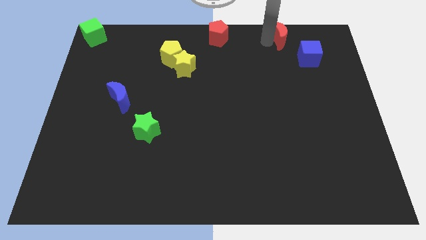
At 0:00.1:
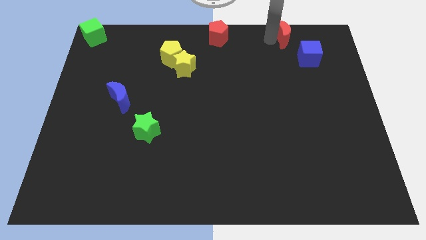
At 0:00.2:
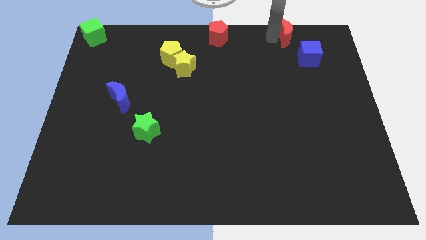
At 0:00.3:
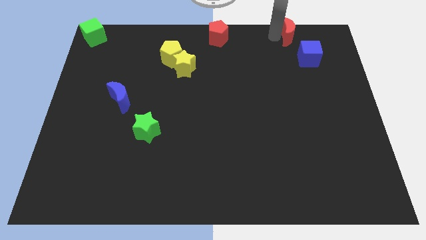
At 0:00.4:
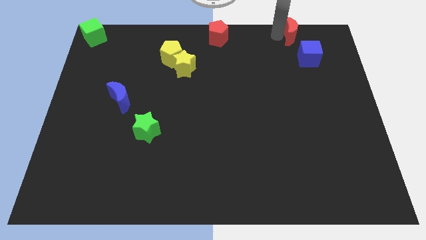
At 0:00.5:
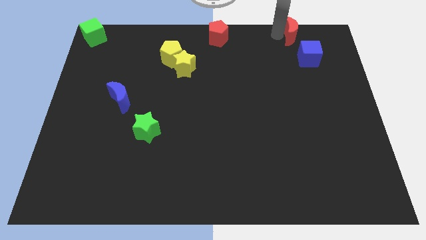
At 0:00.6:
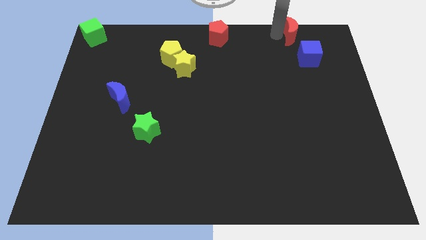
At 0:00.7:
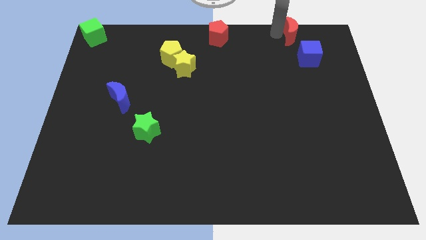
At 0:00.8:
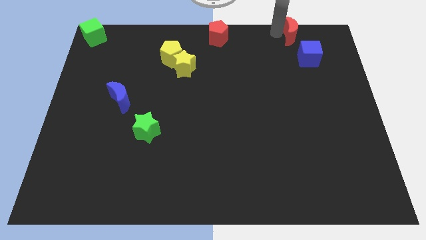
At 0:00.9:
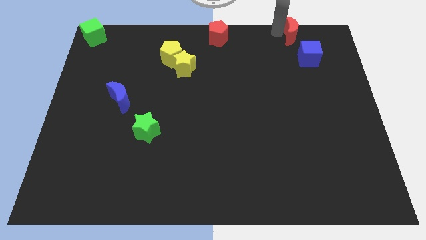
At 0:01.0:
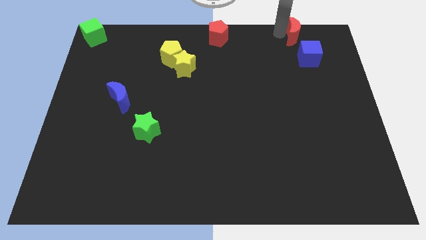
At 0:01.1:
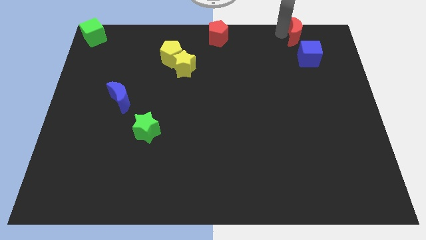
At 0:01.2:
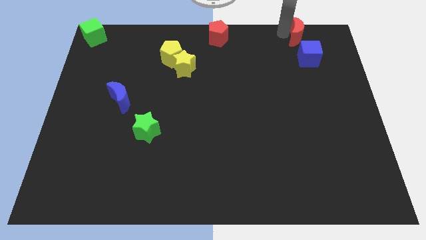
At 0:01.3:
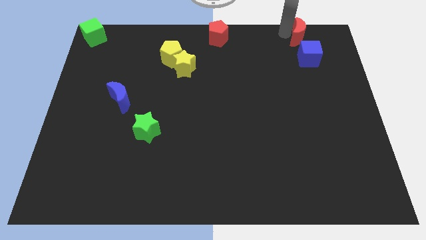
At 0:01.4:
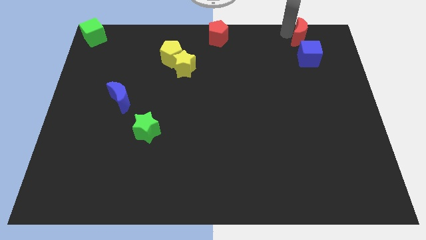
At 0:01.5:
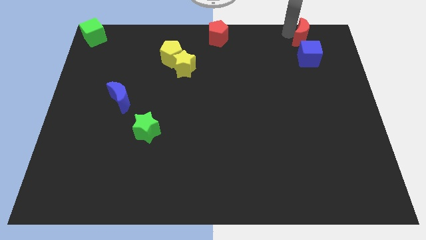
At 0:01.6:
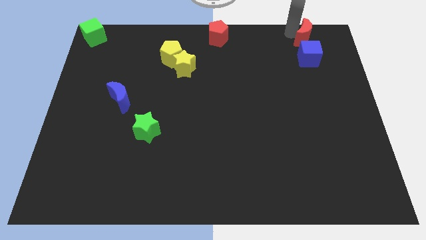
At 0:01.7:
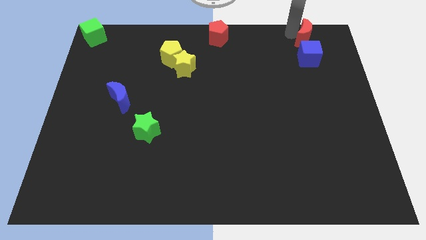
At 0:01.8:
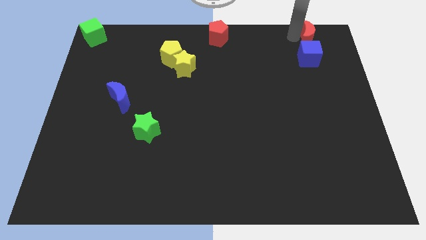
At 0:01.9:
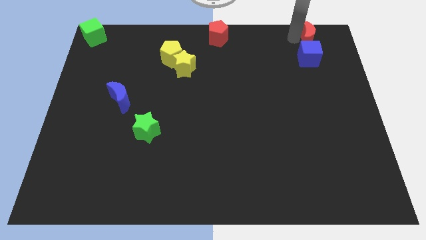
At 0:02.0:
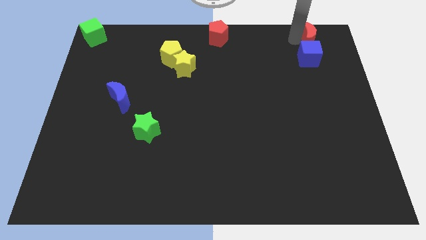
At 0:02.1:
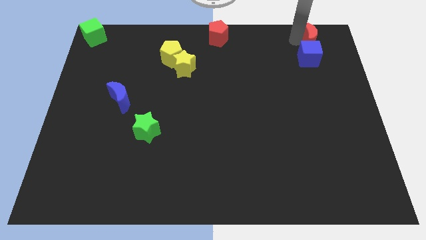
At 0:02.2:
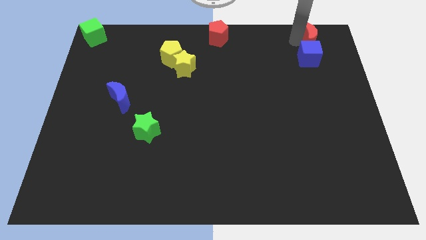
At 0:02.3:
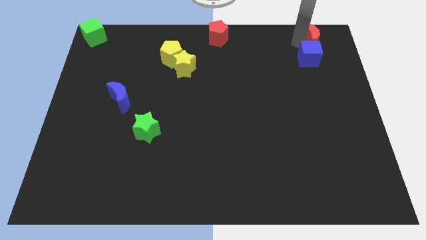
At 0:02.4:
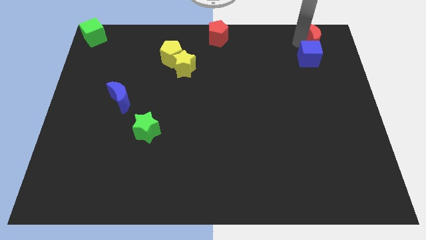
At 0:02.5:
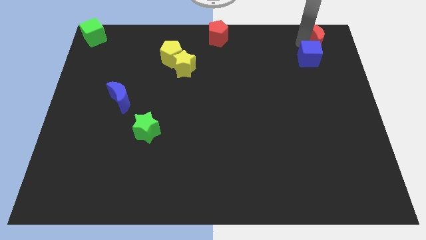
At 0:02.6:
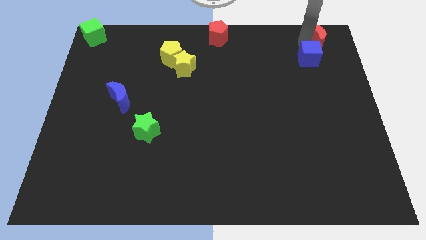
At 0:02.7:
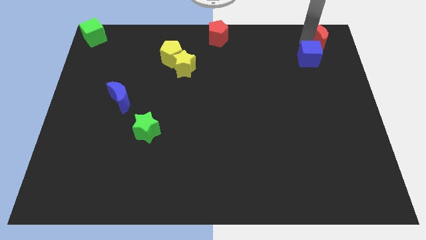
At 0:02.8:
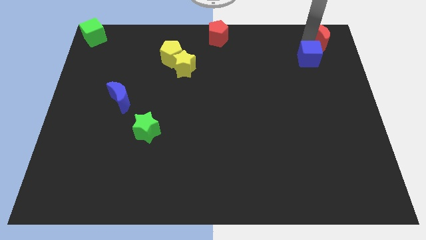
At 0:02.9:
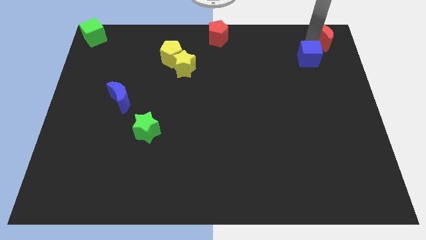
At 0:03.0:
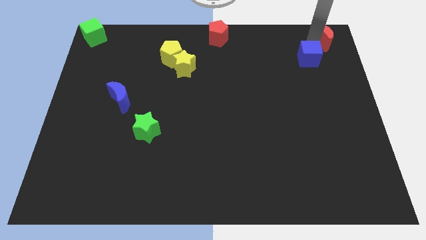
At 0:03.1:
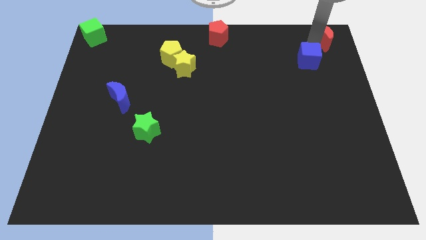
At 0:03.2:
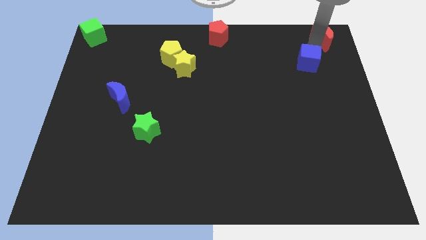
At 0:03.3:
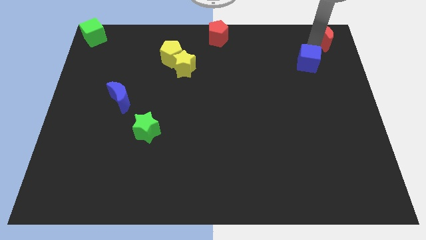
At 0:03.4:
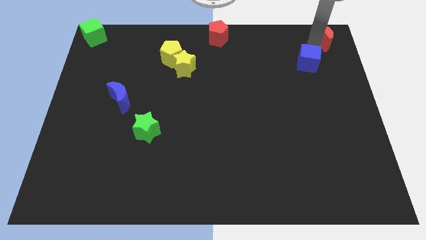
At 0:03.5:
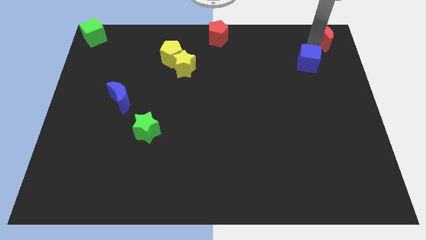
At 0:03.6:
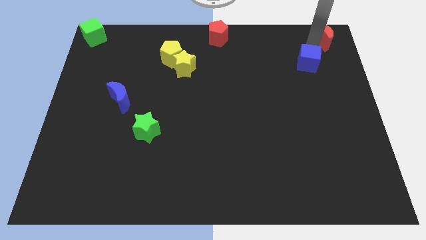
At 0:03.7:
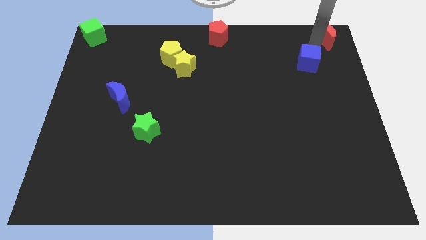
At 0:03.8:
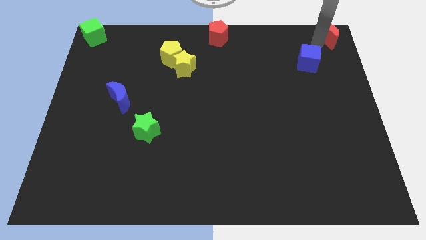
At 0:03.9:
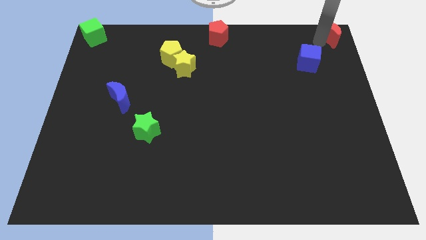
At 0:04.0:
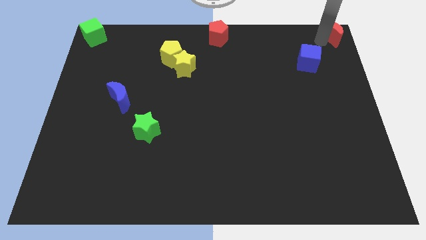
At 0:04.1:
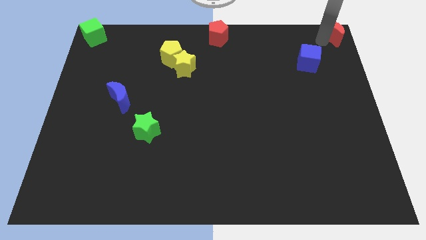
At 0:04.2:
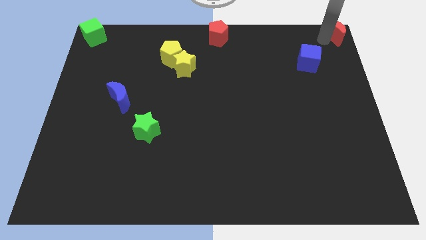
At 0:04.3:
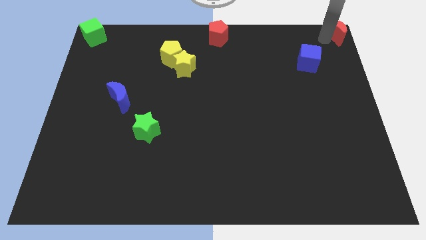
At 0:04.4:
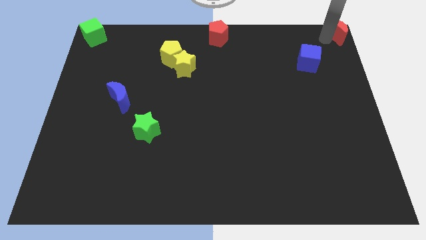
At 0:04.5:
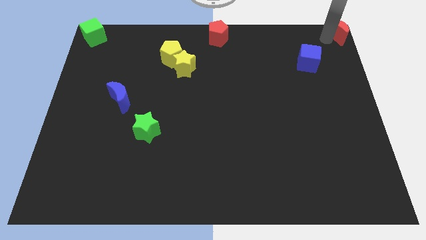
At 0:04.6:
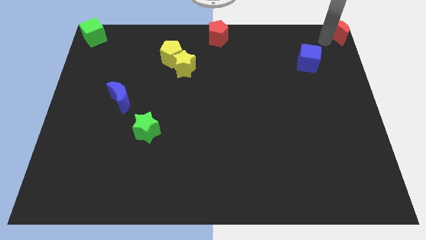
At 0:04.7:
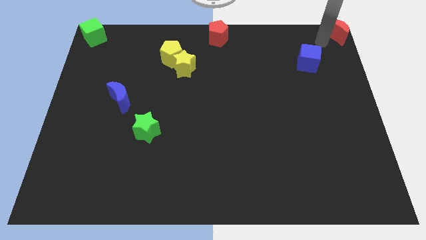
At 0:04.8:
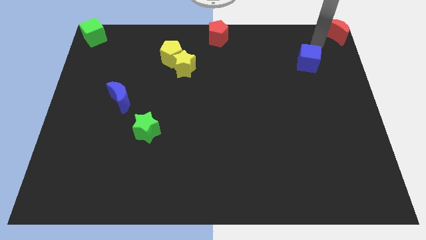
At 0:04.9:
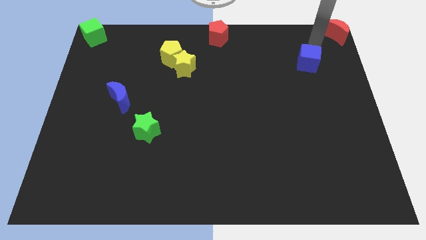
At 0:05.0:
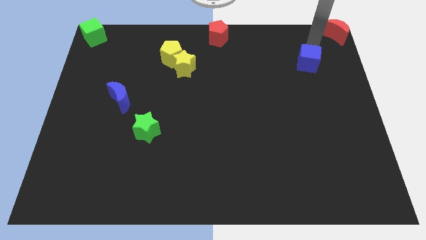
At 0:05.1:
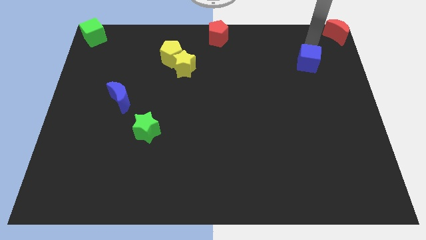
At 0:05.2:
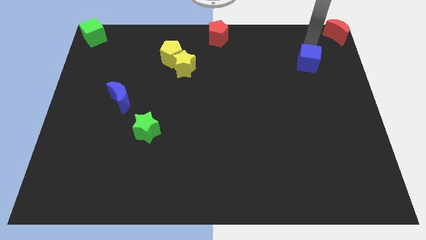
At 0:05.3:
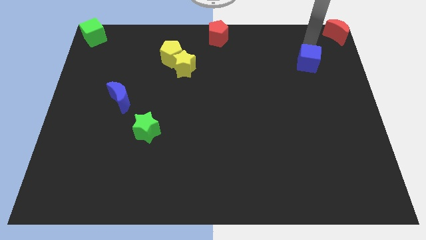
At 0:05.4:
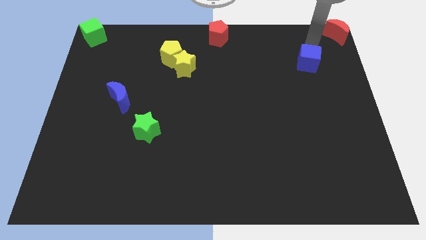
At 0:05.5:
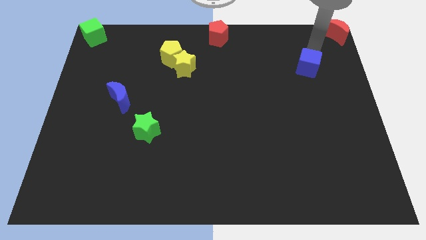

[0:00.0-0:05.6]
place the red crescent towards the top right corner of the board

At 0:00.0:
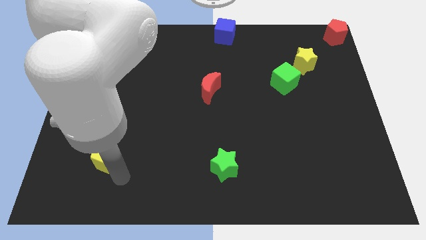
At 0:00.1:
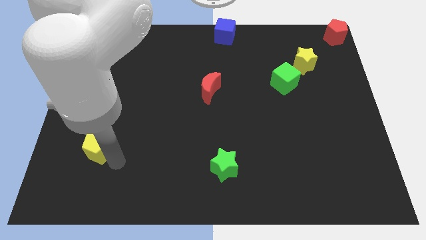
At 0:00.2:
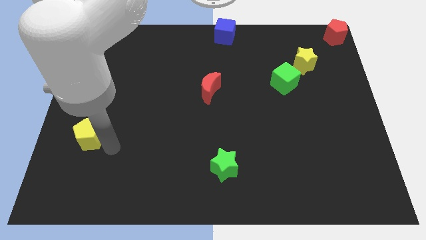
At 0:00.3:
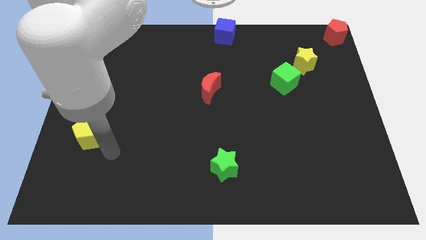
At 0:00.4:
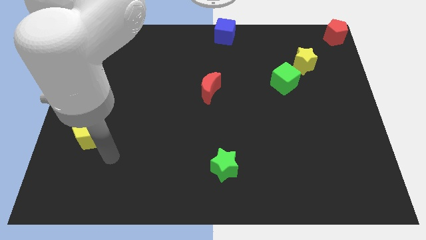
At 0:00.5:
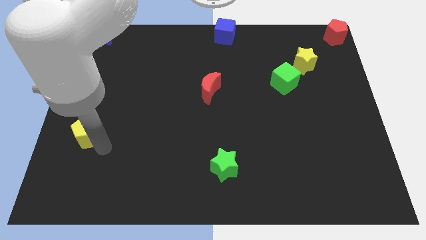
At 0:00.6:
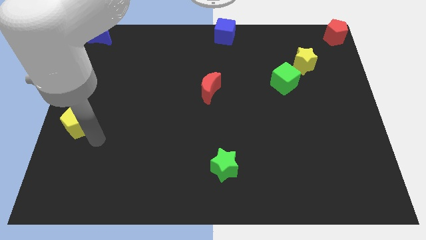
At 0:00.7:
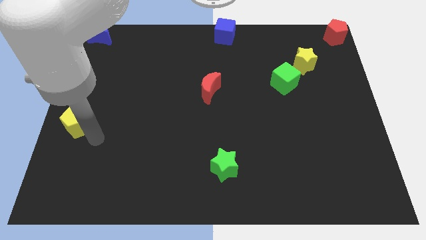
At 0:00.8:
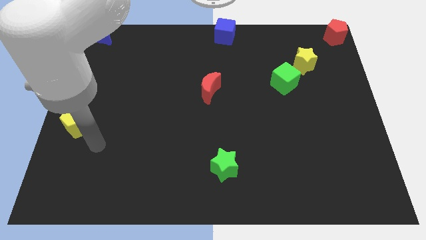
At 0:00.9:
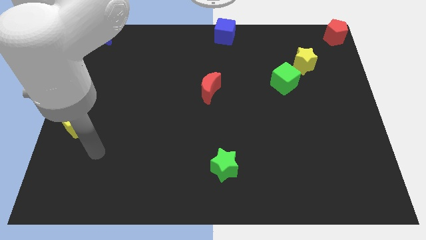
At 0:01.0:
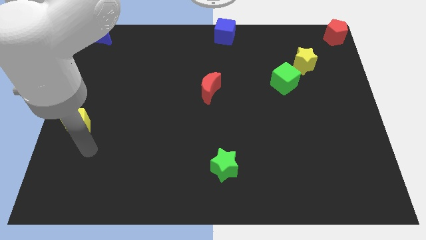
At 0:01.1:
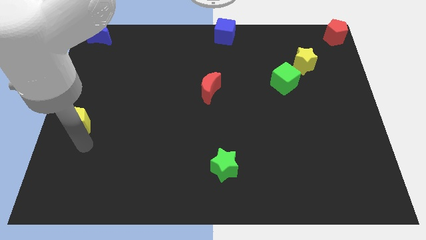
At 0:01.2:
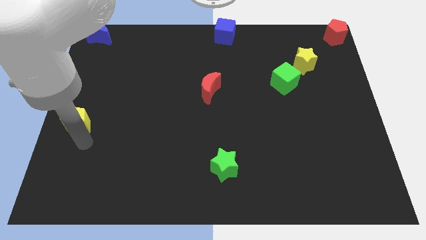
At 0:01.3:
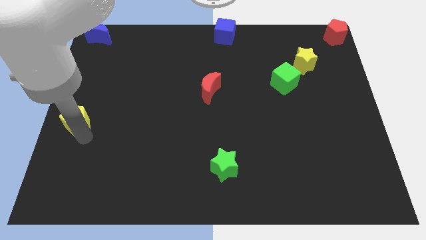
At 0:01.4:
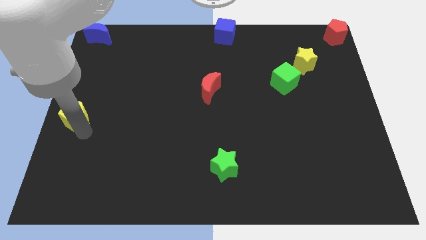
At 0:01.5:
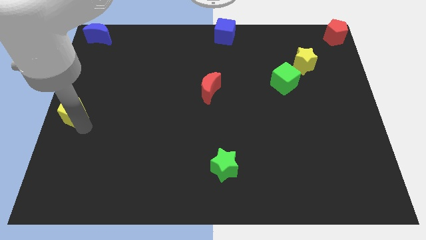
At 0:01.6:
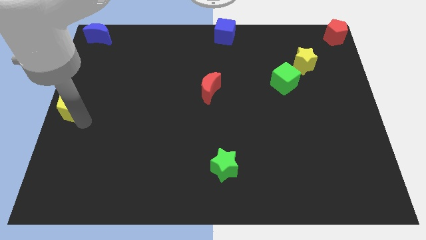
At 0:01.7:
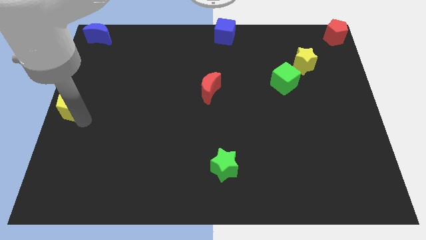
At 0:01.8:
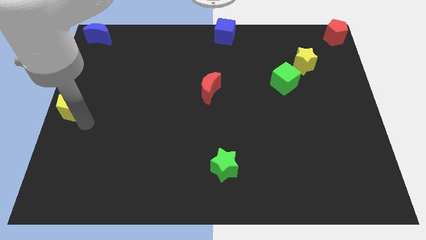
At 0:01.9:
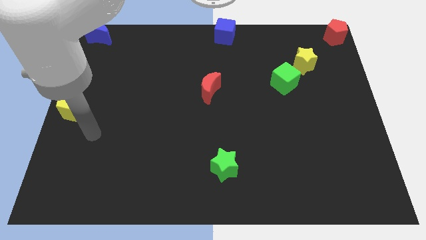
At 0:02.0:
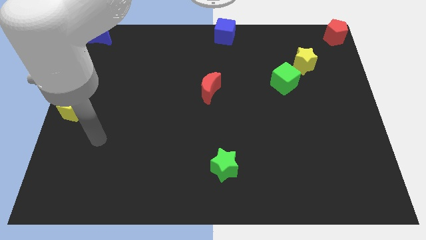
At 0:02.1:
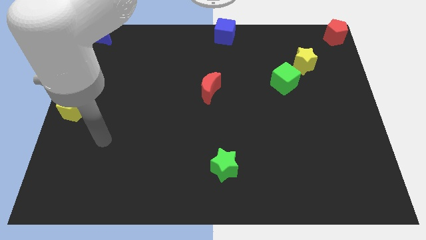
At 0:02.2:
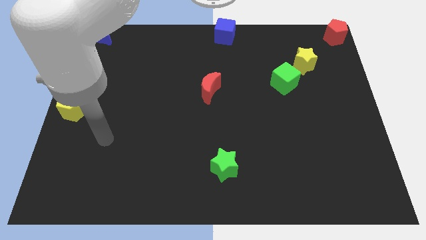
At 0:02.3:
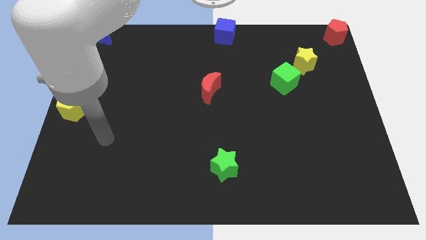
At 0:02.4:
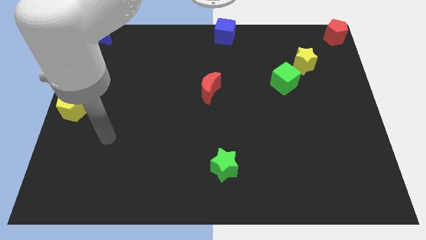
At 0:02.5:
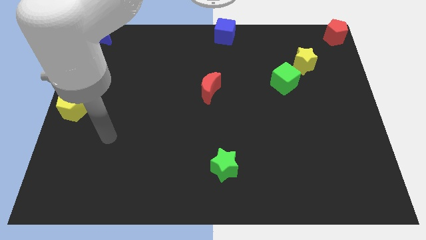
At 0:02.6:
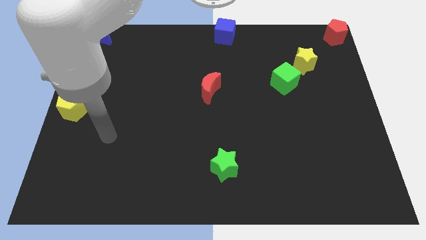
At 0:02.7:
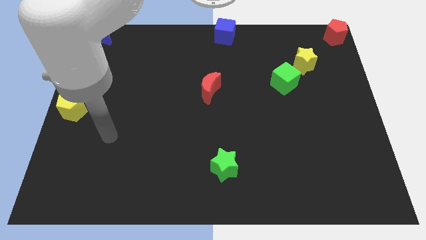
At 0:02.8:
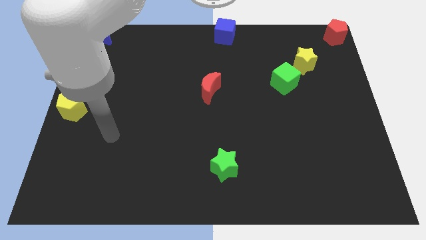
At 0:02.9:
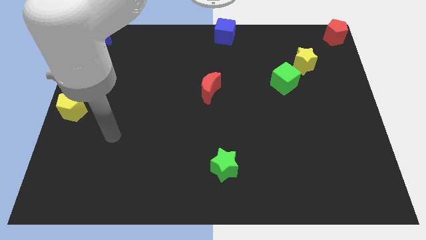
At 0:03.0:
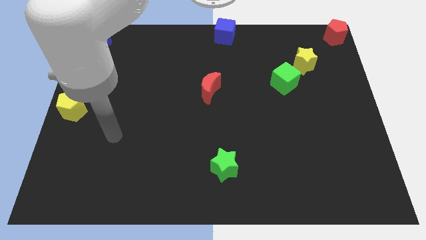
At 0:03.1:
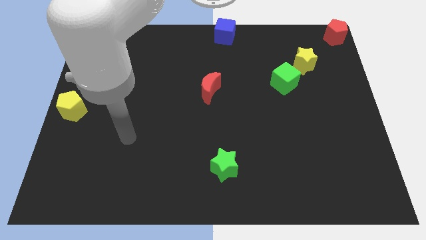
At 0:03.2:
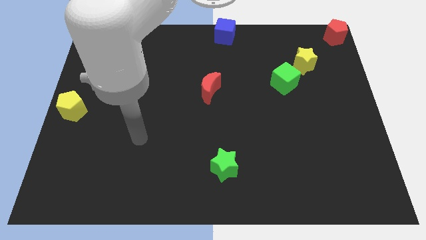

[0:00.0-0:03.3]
place the yellow pentagon below the blue moon
